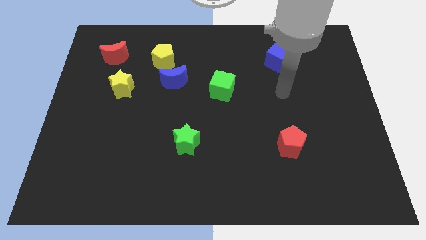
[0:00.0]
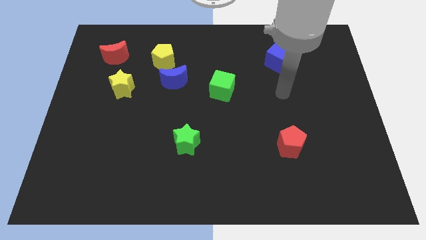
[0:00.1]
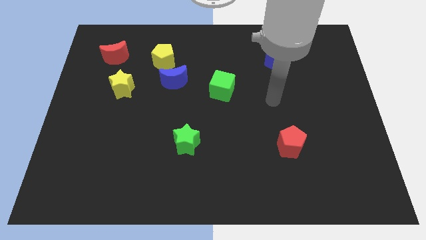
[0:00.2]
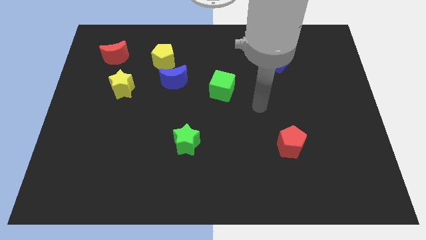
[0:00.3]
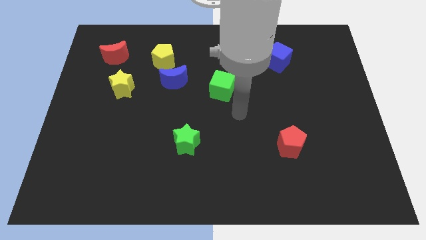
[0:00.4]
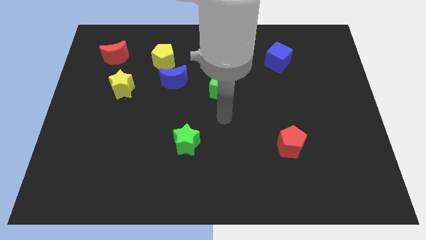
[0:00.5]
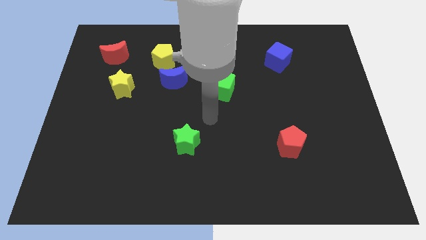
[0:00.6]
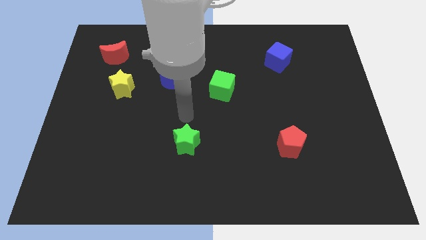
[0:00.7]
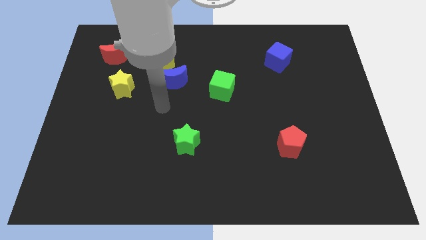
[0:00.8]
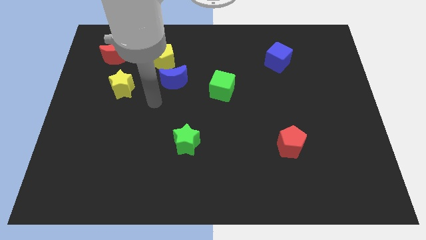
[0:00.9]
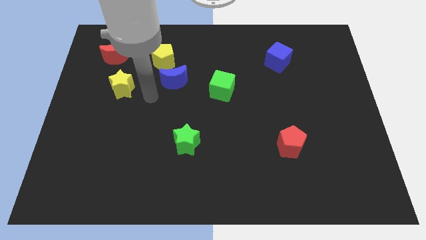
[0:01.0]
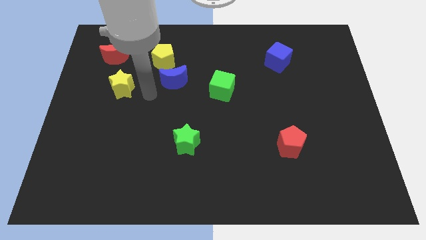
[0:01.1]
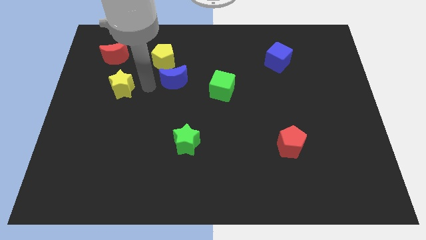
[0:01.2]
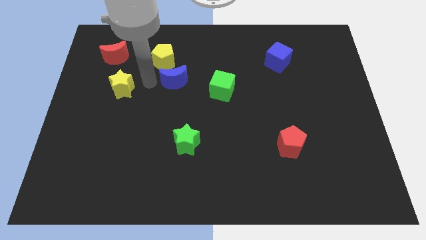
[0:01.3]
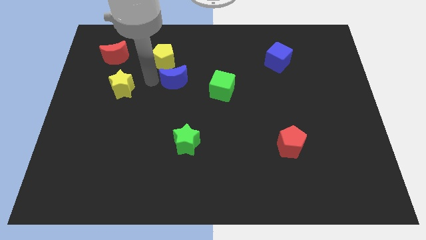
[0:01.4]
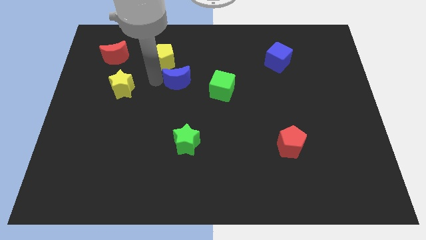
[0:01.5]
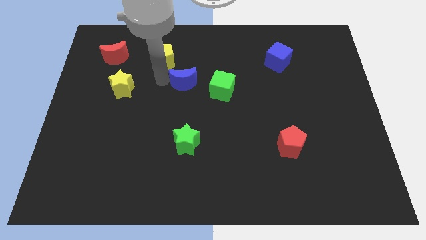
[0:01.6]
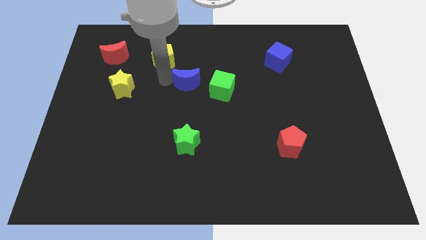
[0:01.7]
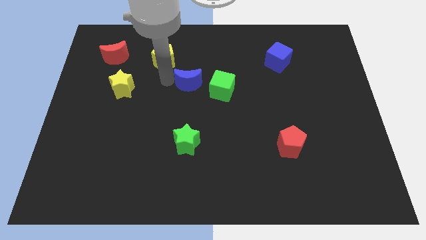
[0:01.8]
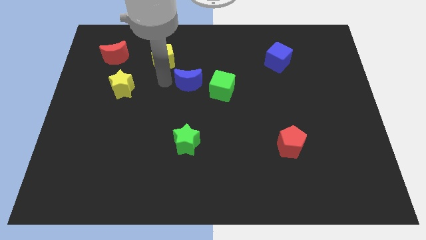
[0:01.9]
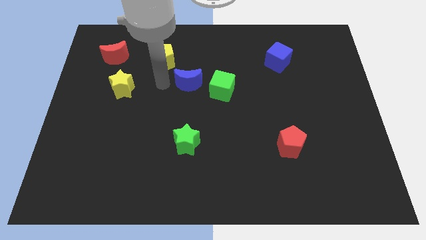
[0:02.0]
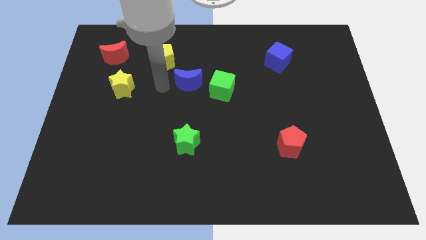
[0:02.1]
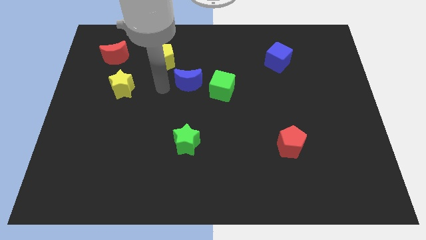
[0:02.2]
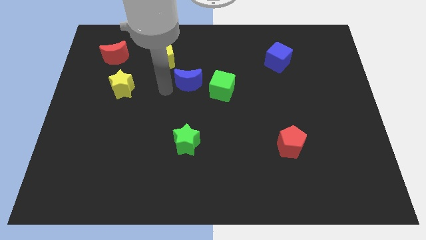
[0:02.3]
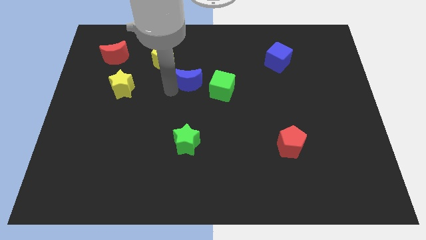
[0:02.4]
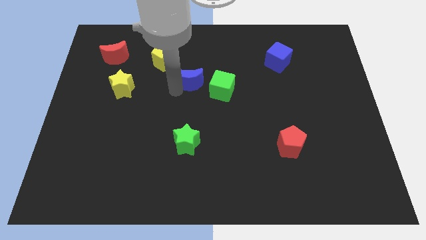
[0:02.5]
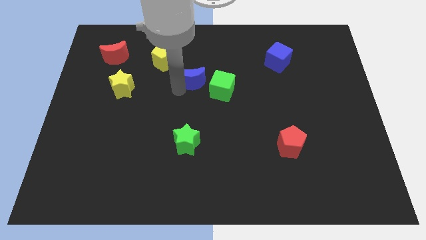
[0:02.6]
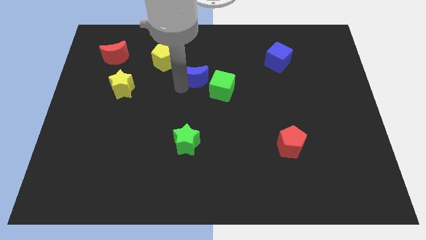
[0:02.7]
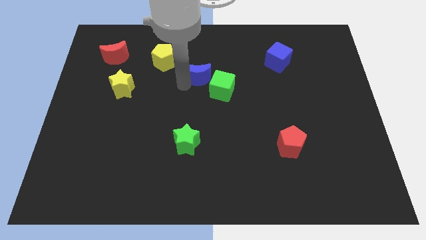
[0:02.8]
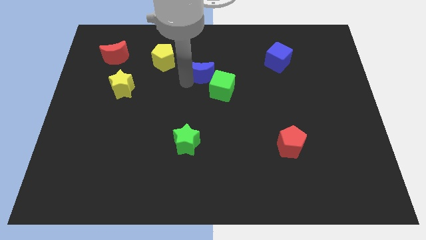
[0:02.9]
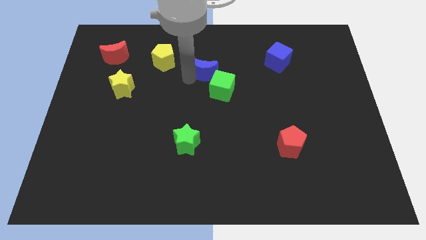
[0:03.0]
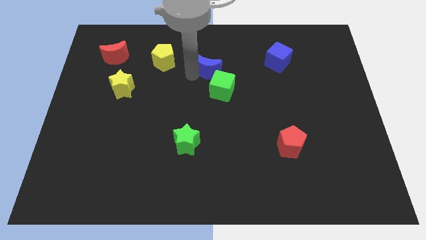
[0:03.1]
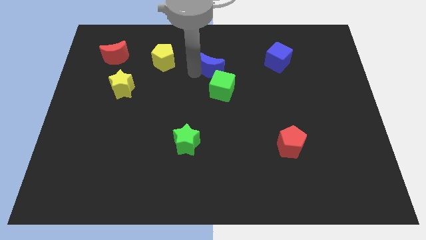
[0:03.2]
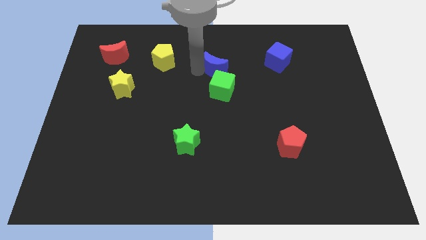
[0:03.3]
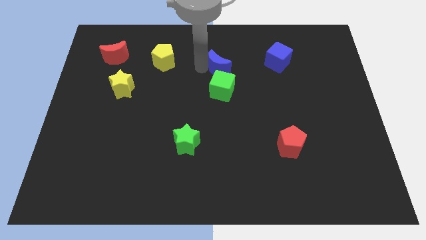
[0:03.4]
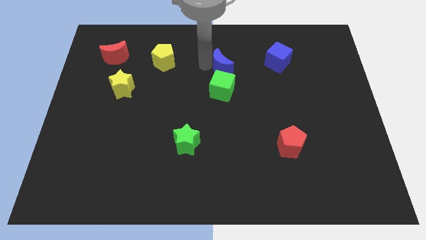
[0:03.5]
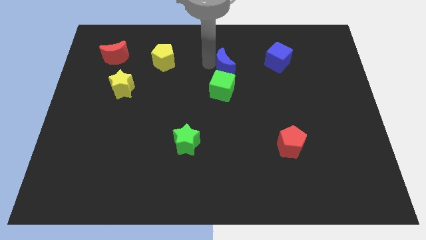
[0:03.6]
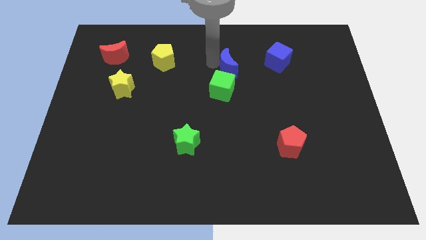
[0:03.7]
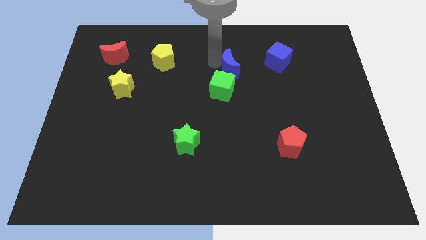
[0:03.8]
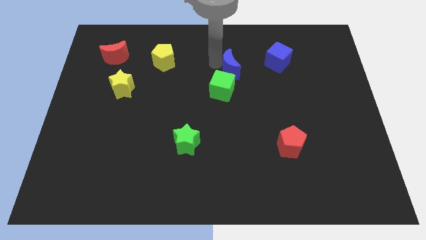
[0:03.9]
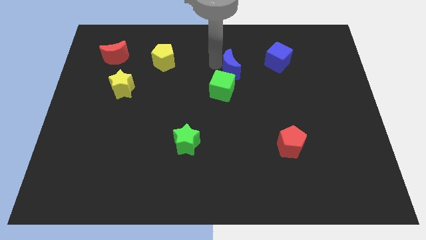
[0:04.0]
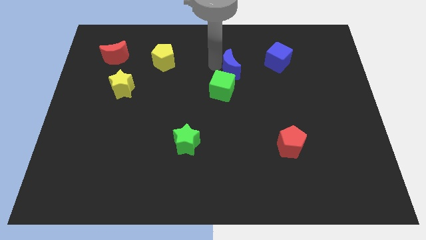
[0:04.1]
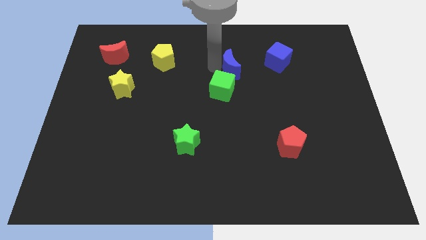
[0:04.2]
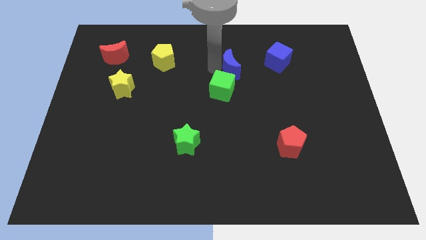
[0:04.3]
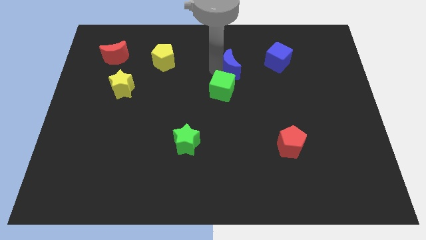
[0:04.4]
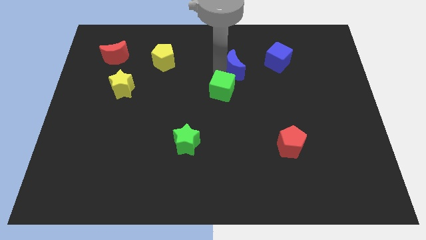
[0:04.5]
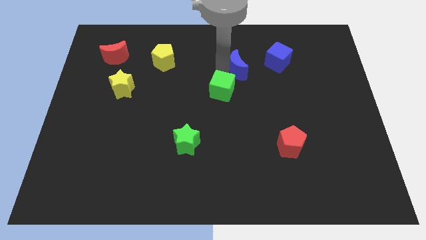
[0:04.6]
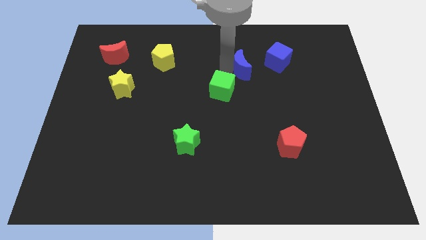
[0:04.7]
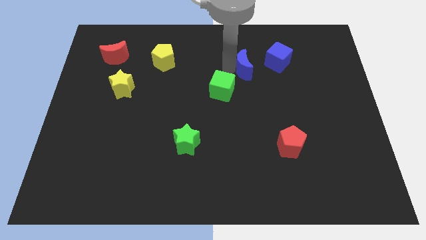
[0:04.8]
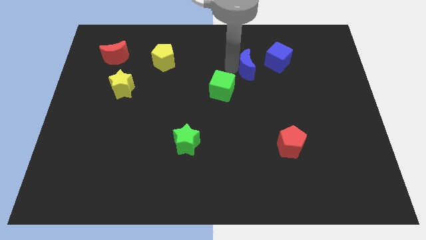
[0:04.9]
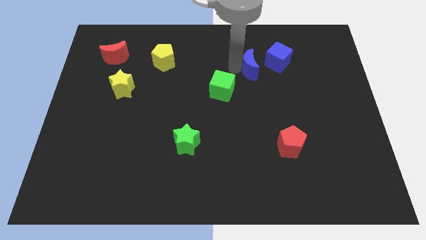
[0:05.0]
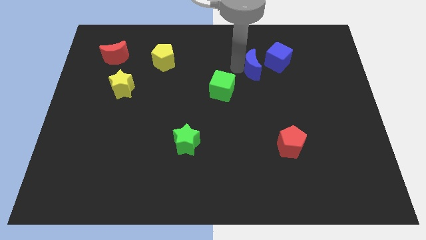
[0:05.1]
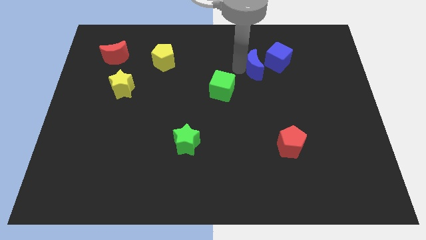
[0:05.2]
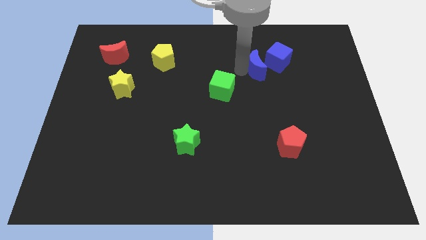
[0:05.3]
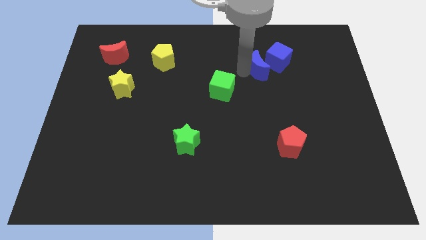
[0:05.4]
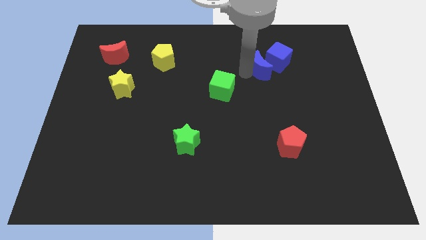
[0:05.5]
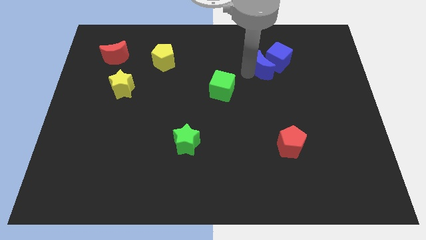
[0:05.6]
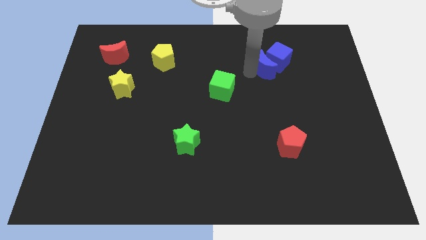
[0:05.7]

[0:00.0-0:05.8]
push the blue moon towards the blue cube

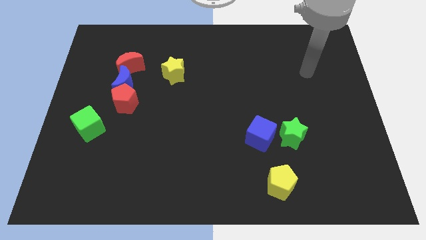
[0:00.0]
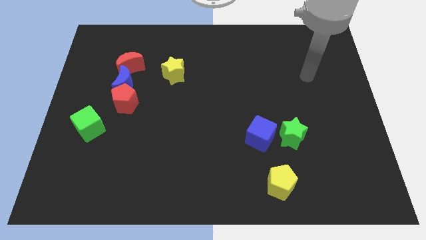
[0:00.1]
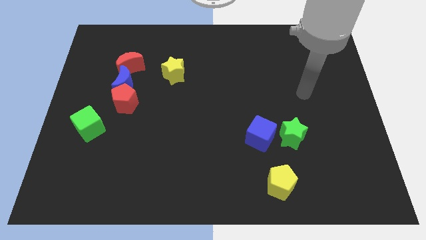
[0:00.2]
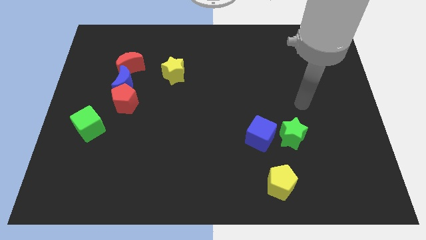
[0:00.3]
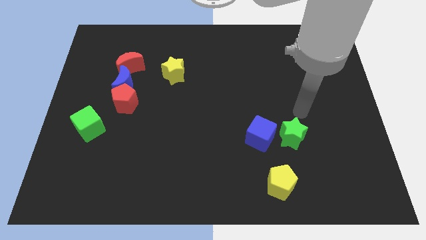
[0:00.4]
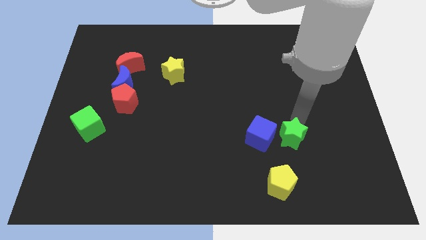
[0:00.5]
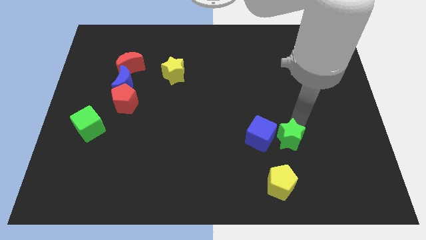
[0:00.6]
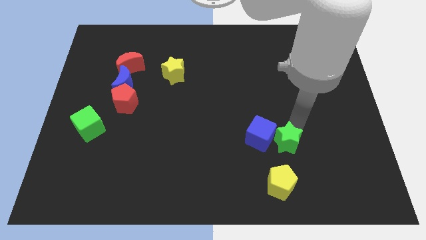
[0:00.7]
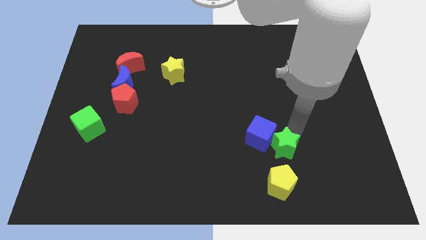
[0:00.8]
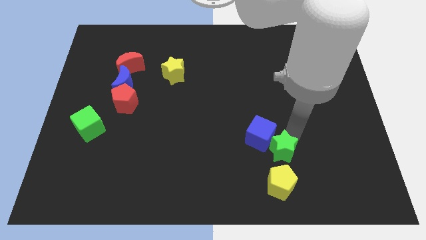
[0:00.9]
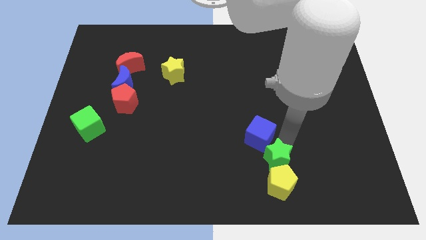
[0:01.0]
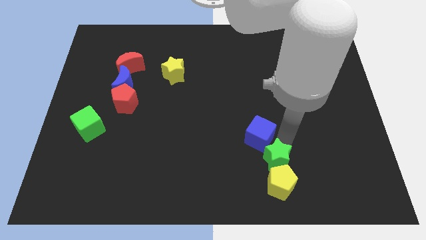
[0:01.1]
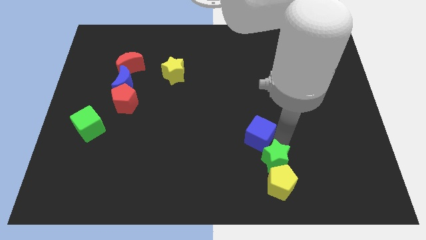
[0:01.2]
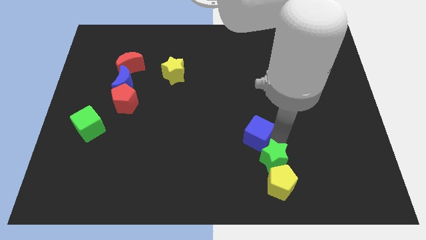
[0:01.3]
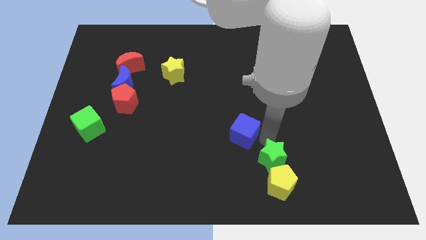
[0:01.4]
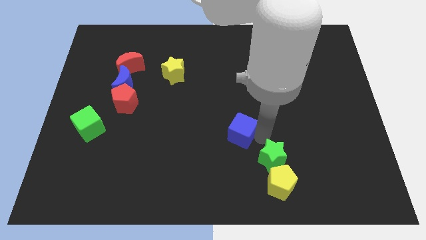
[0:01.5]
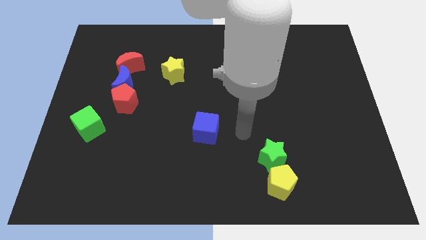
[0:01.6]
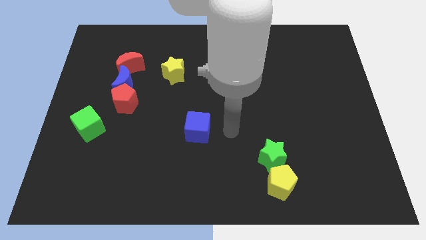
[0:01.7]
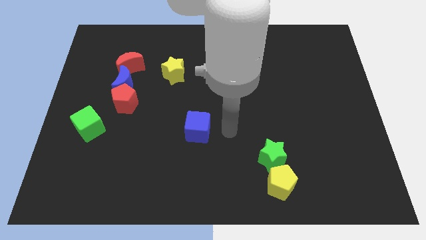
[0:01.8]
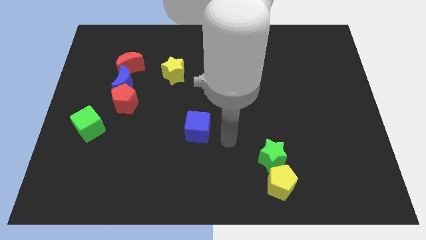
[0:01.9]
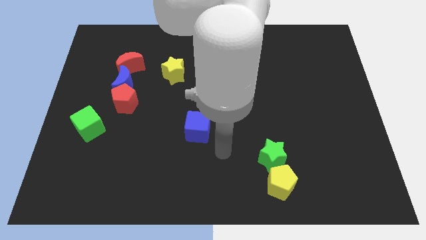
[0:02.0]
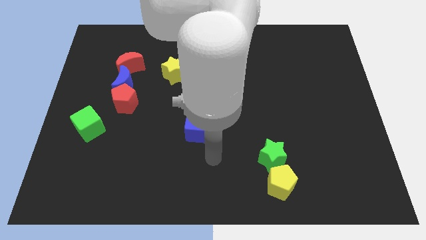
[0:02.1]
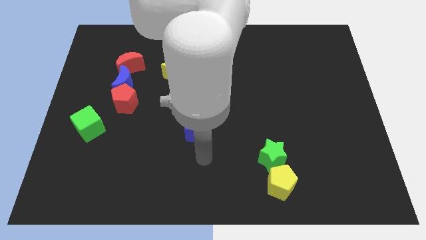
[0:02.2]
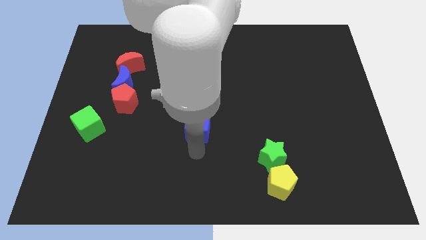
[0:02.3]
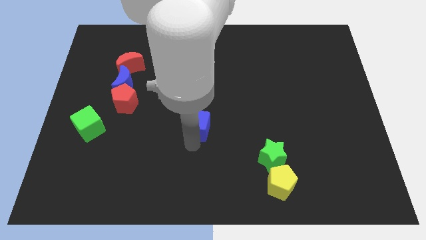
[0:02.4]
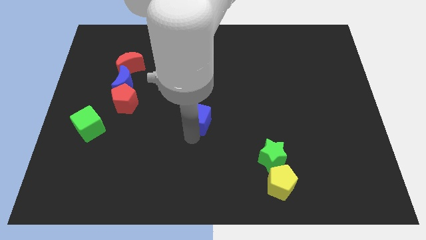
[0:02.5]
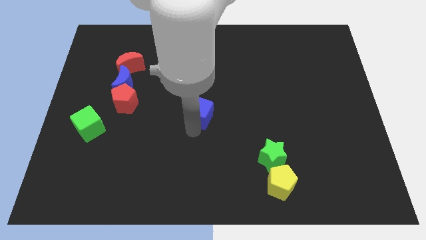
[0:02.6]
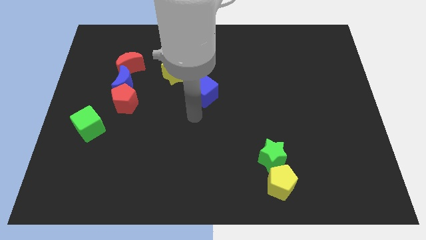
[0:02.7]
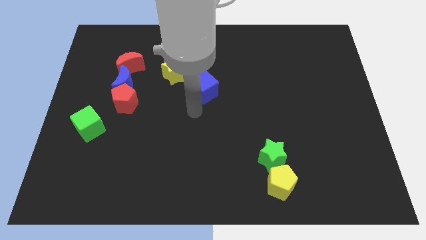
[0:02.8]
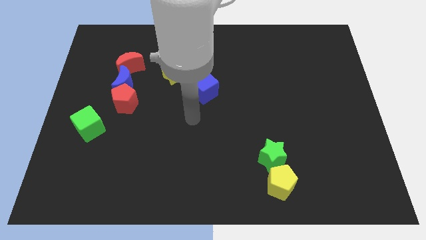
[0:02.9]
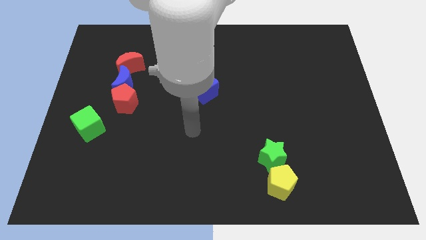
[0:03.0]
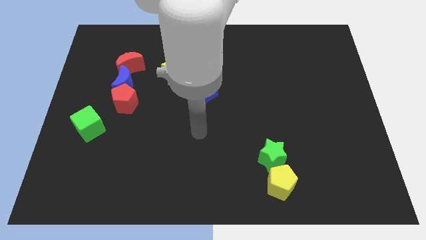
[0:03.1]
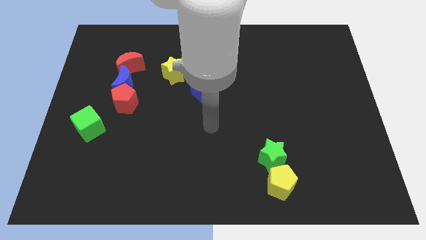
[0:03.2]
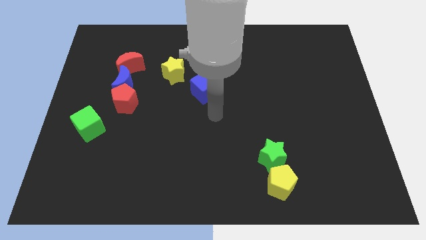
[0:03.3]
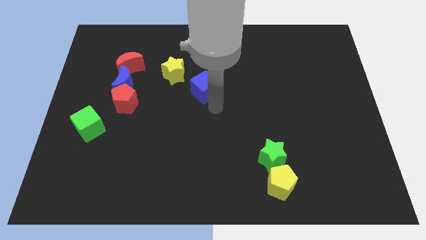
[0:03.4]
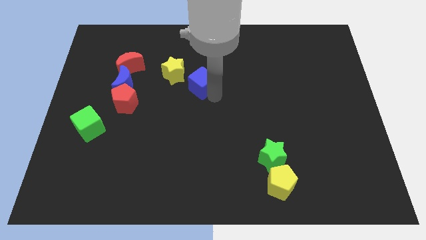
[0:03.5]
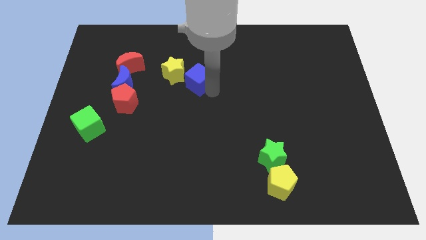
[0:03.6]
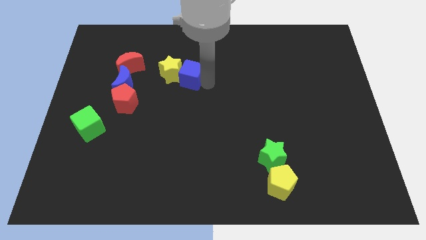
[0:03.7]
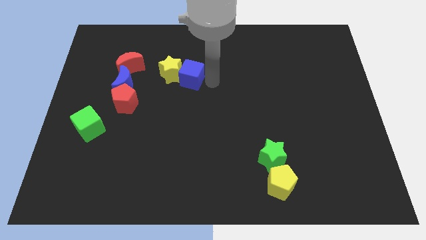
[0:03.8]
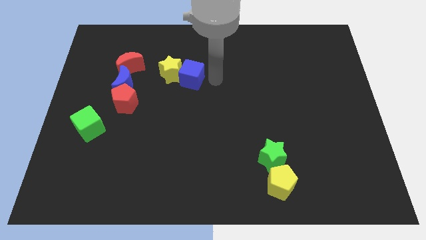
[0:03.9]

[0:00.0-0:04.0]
move the blue cube next to the yellow star
